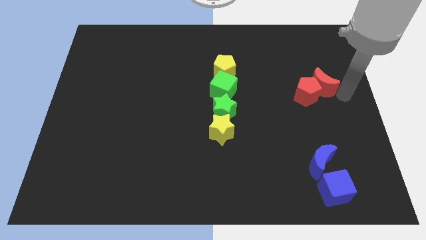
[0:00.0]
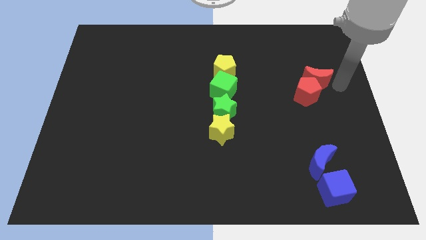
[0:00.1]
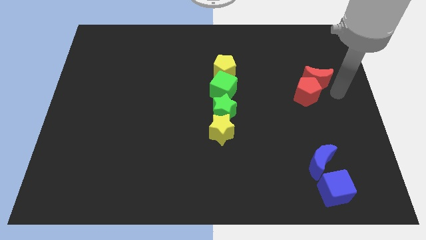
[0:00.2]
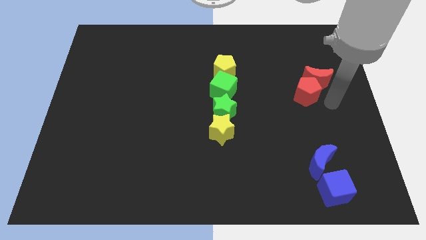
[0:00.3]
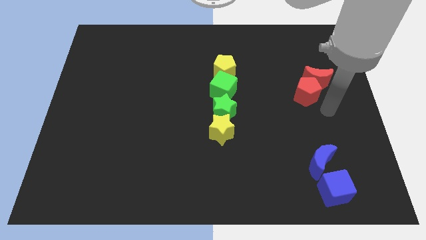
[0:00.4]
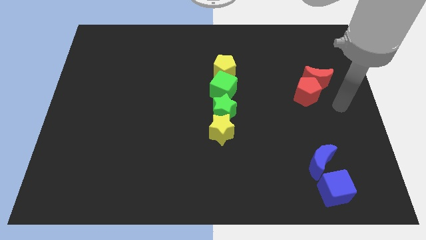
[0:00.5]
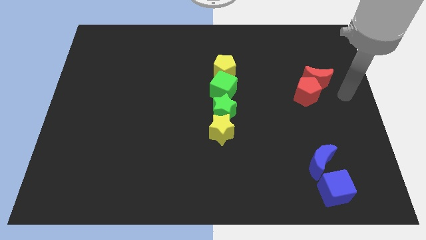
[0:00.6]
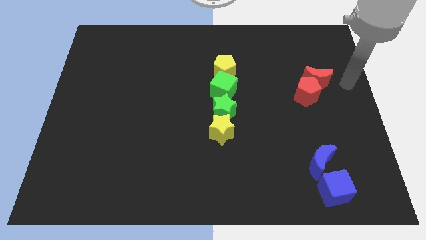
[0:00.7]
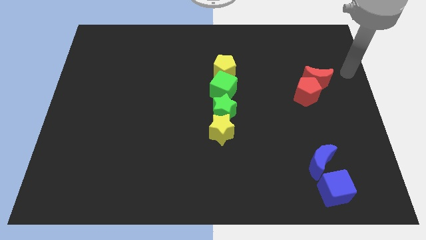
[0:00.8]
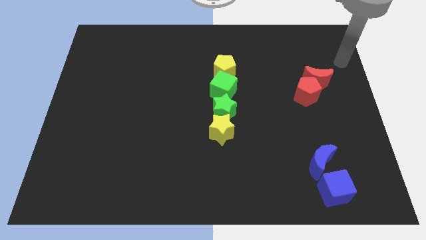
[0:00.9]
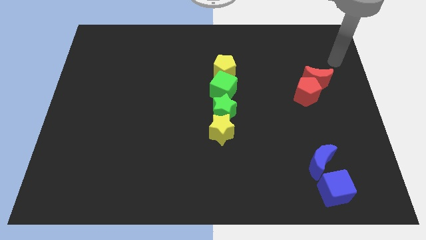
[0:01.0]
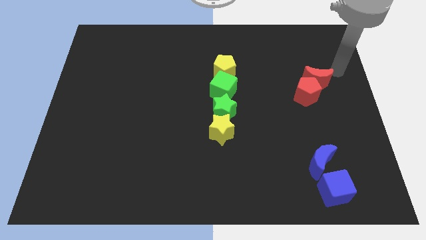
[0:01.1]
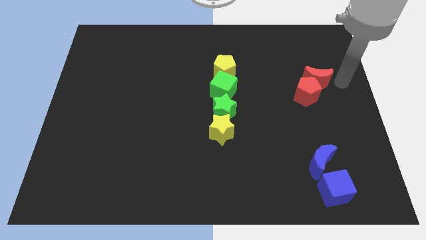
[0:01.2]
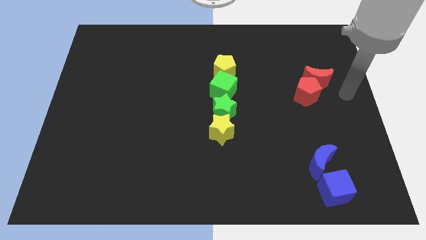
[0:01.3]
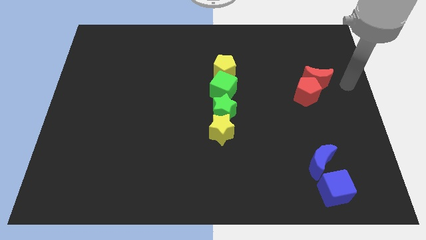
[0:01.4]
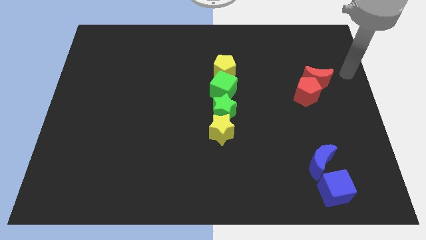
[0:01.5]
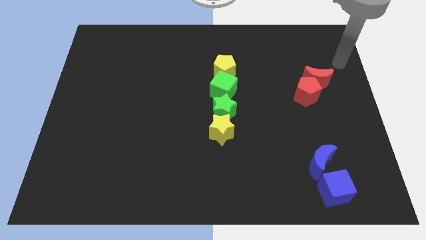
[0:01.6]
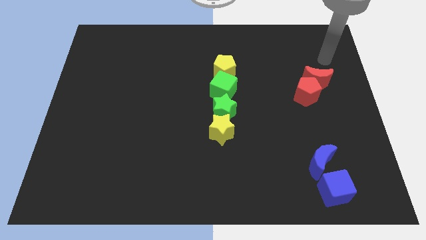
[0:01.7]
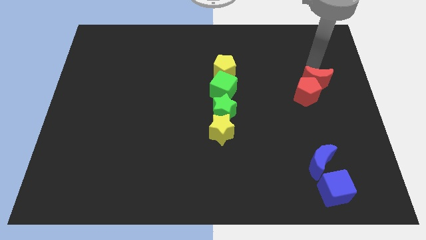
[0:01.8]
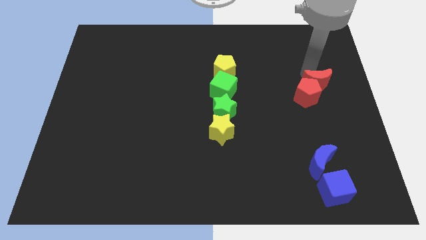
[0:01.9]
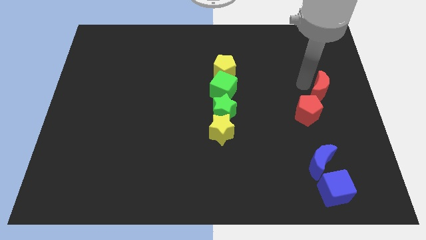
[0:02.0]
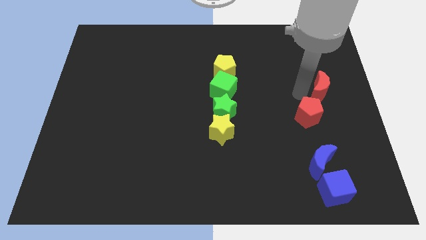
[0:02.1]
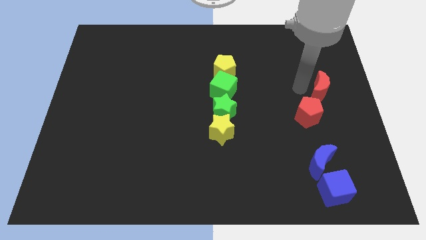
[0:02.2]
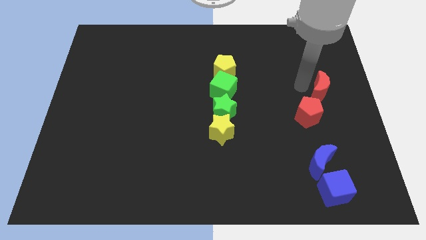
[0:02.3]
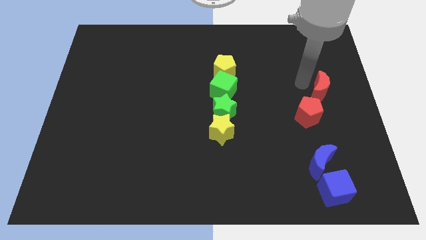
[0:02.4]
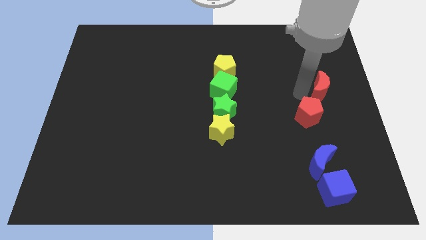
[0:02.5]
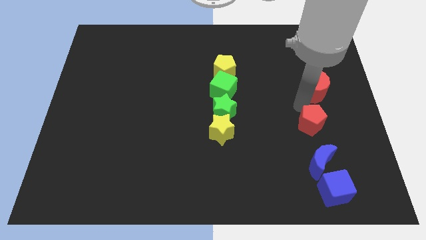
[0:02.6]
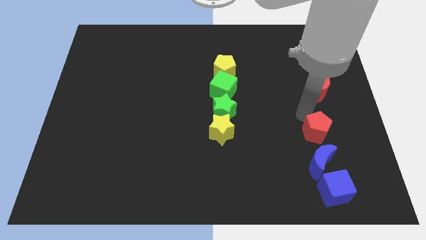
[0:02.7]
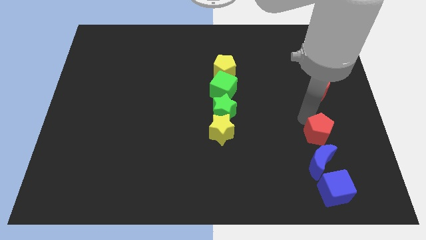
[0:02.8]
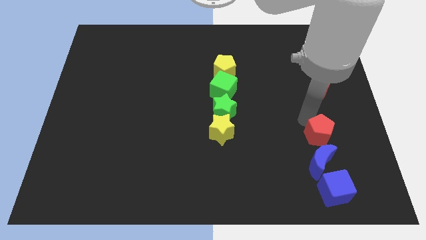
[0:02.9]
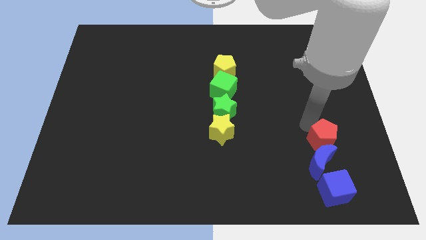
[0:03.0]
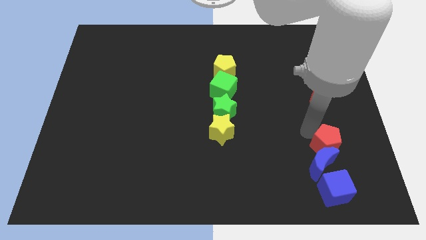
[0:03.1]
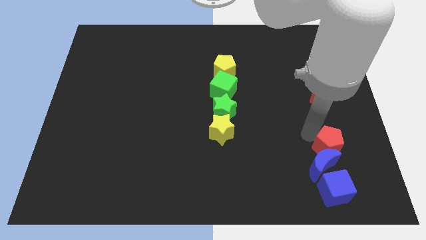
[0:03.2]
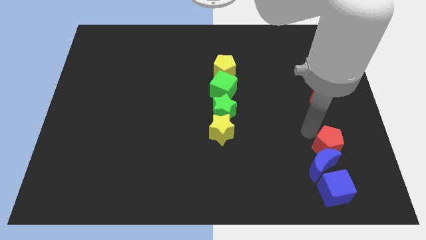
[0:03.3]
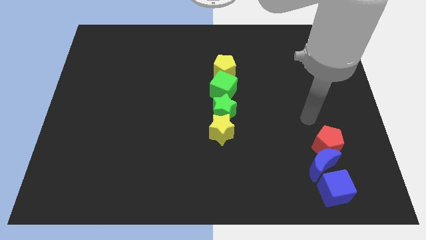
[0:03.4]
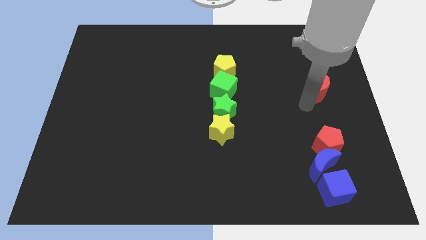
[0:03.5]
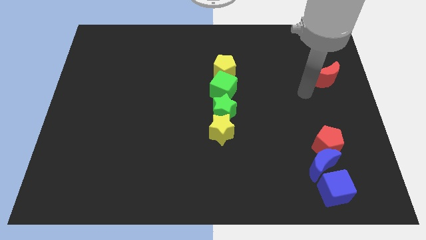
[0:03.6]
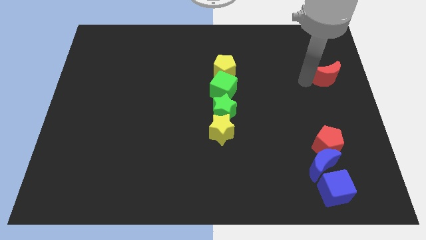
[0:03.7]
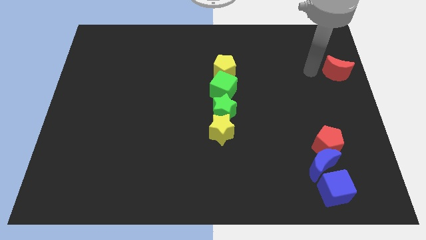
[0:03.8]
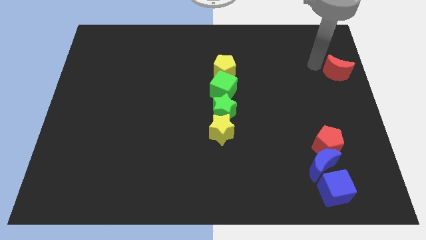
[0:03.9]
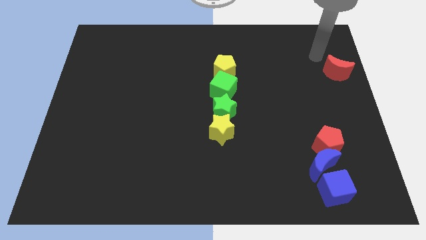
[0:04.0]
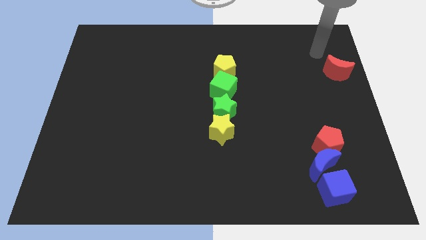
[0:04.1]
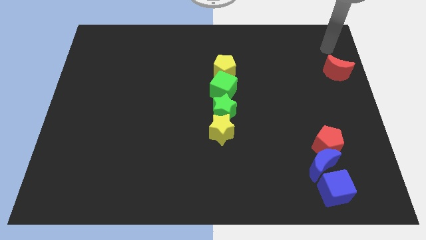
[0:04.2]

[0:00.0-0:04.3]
place the red pentagon above the blue moon

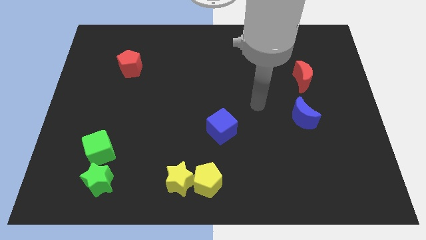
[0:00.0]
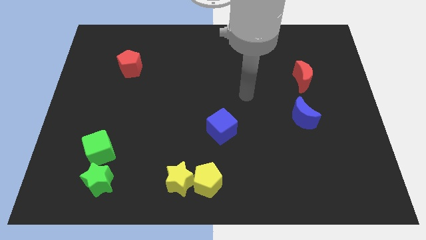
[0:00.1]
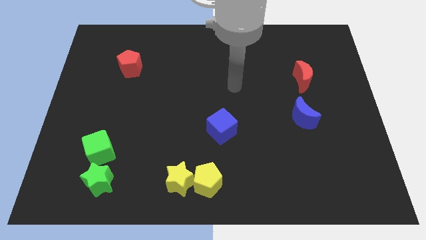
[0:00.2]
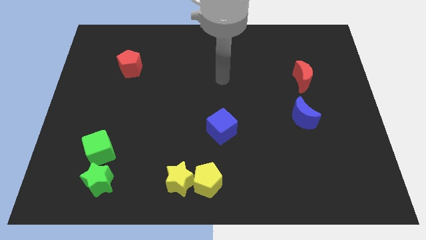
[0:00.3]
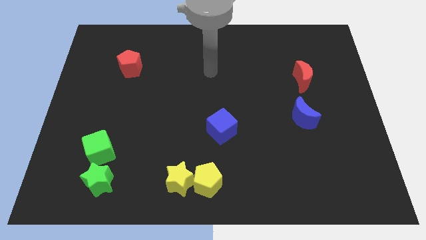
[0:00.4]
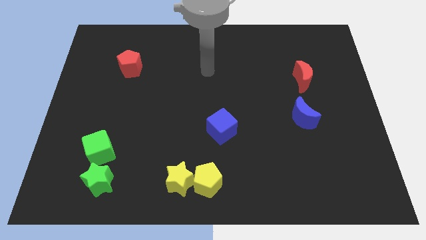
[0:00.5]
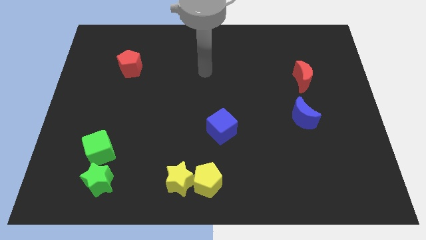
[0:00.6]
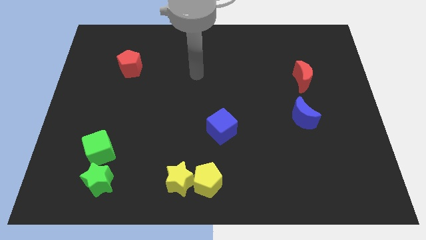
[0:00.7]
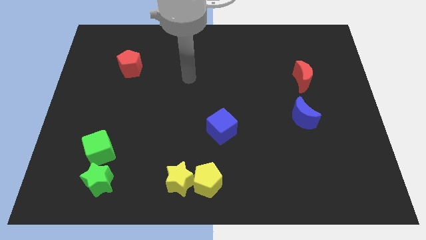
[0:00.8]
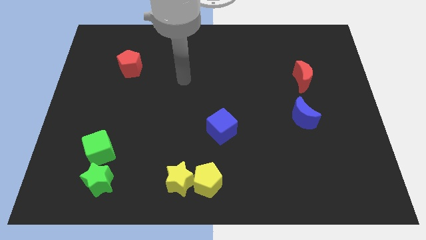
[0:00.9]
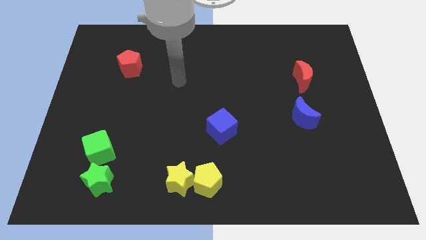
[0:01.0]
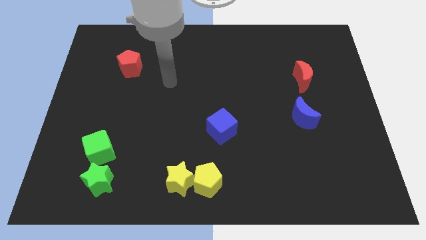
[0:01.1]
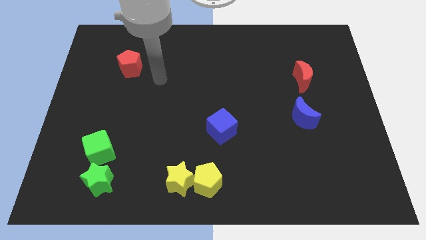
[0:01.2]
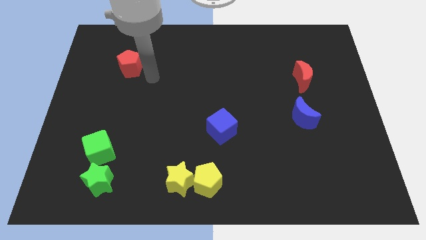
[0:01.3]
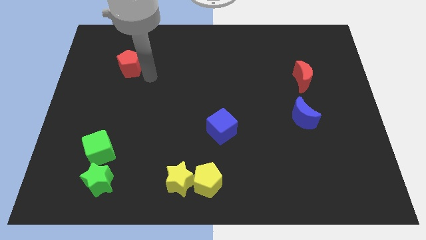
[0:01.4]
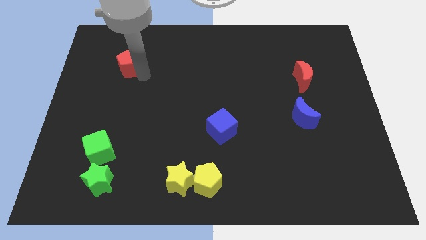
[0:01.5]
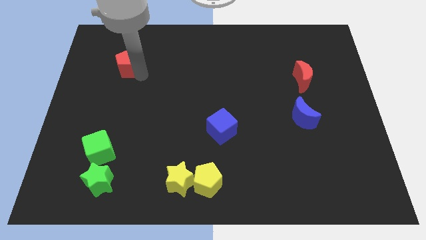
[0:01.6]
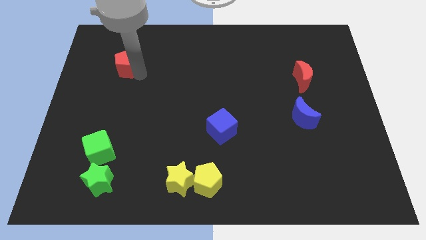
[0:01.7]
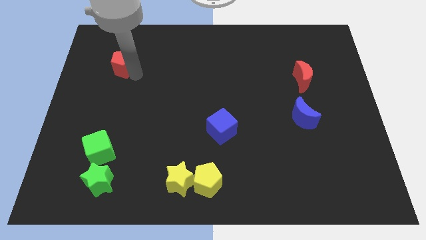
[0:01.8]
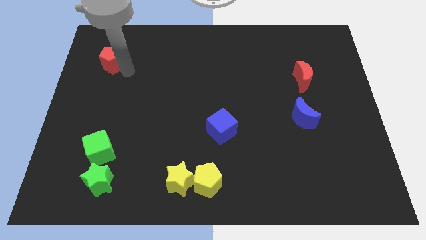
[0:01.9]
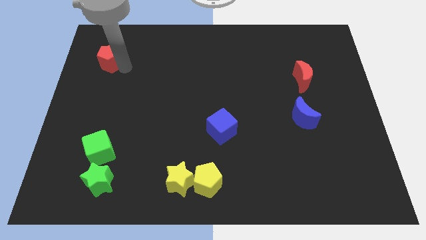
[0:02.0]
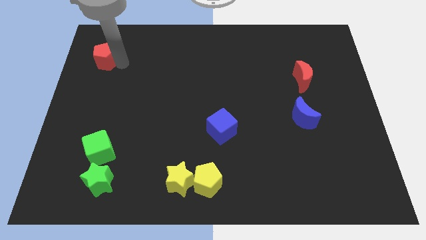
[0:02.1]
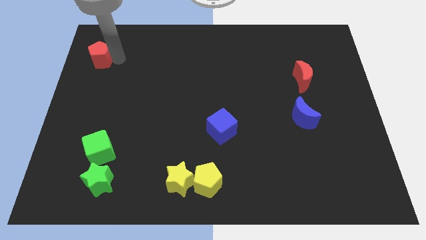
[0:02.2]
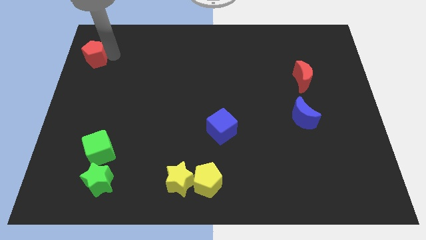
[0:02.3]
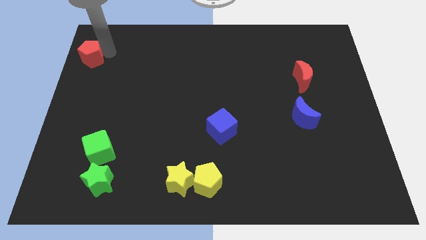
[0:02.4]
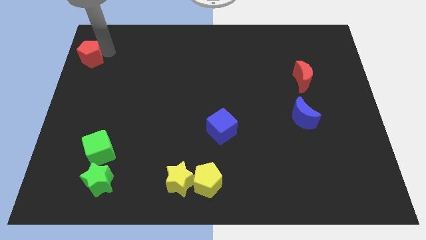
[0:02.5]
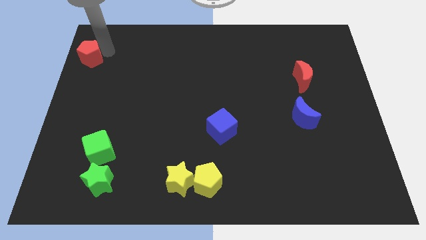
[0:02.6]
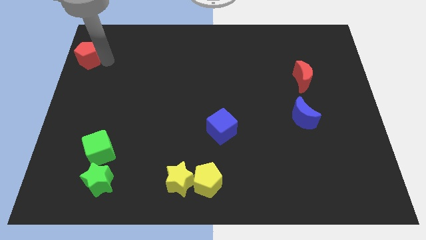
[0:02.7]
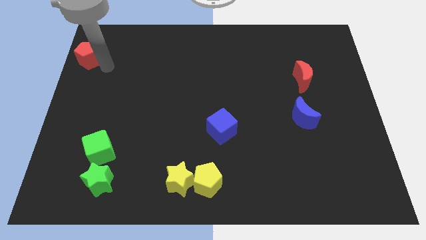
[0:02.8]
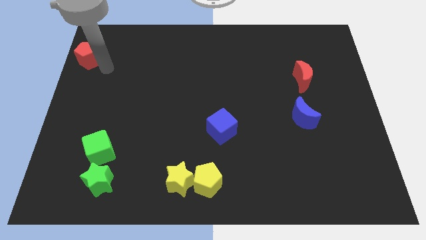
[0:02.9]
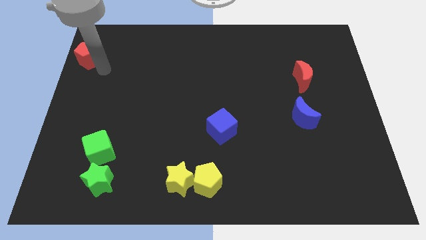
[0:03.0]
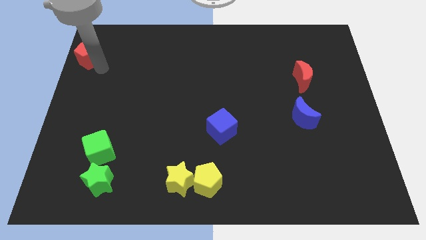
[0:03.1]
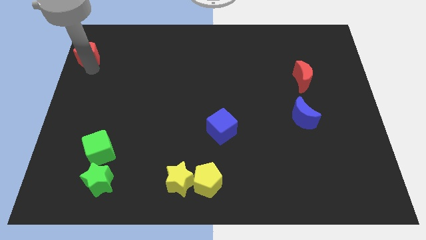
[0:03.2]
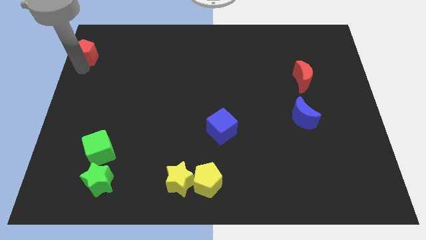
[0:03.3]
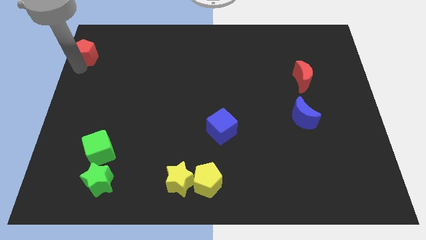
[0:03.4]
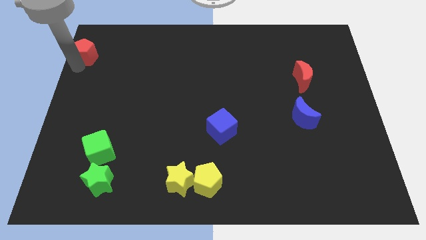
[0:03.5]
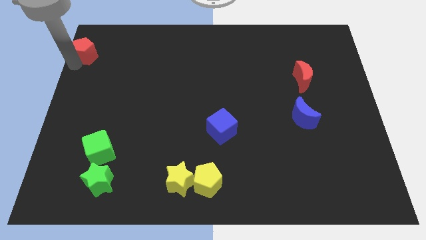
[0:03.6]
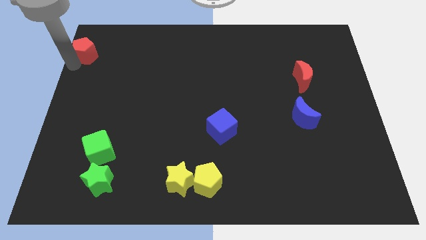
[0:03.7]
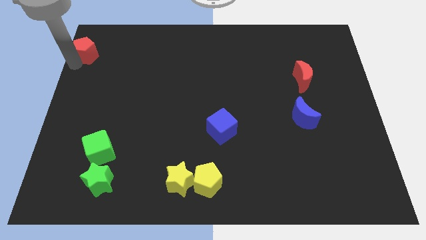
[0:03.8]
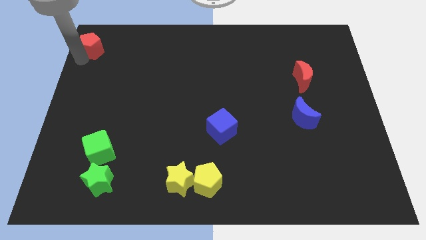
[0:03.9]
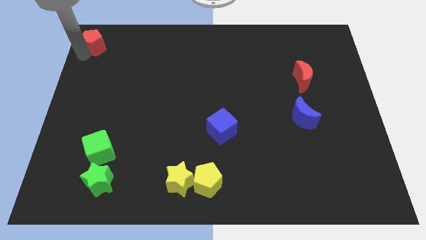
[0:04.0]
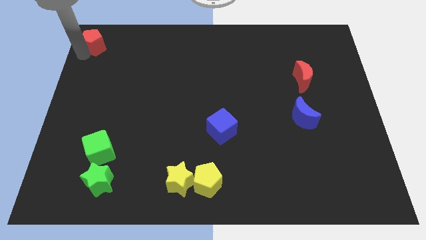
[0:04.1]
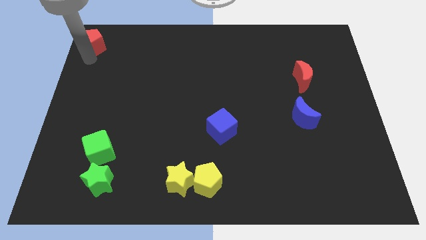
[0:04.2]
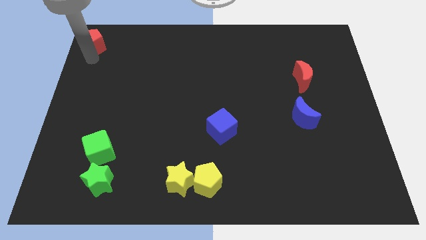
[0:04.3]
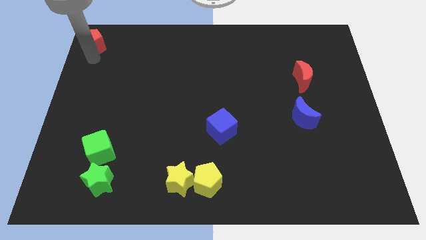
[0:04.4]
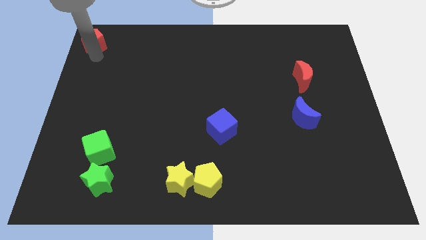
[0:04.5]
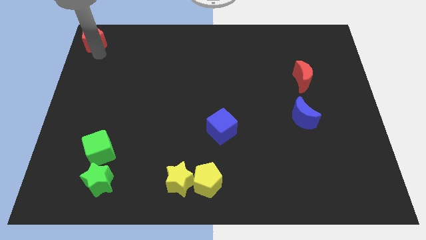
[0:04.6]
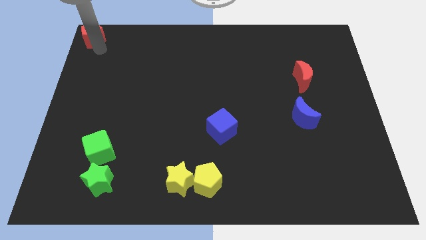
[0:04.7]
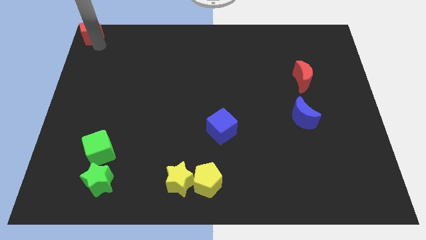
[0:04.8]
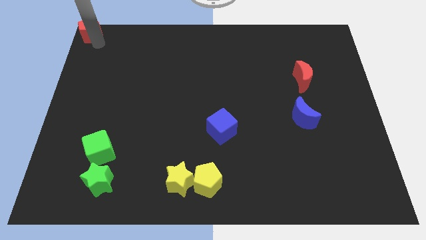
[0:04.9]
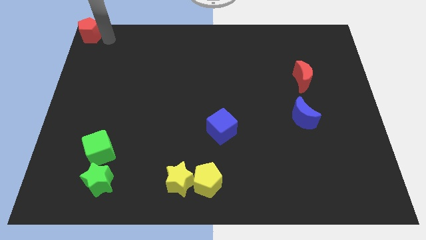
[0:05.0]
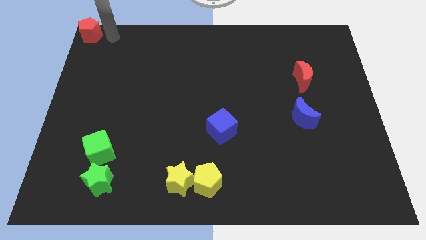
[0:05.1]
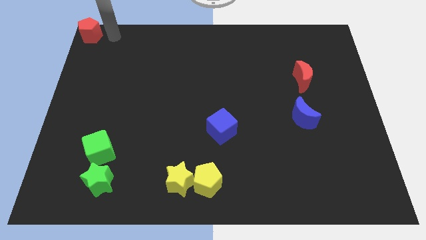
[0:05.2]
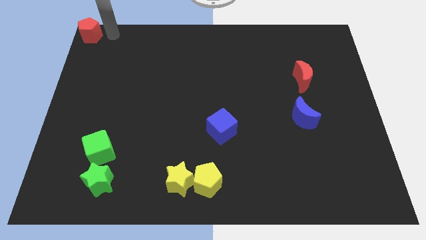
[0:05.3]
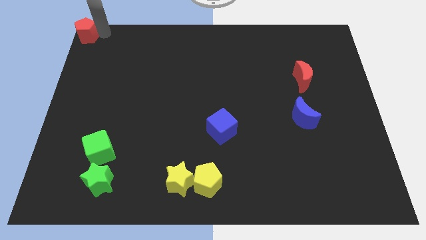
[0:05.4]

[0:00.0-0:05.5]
place the red pentagon at the top left corner of the board
